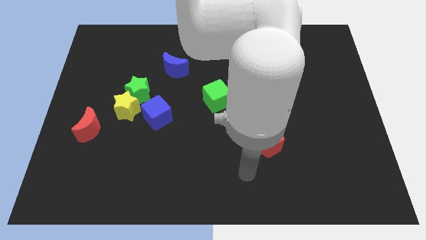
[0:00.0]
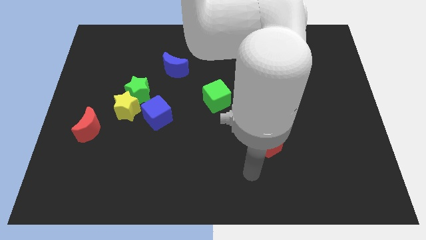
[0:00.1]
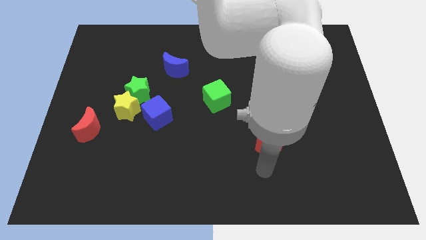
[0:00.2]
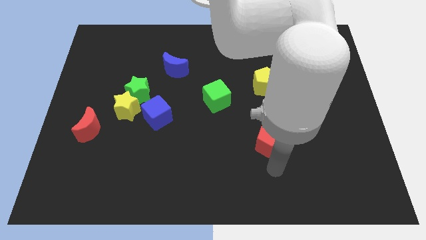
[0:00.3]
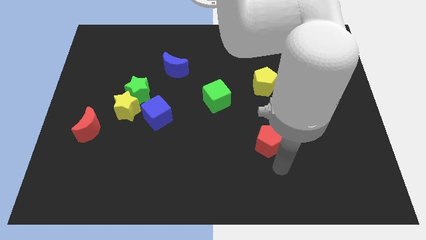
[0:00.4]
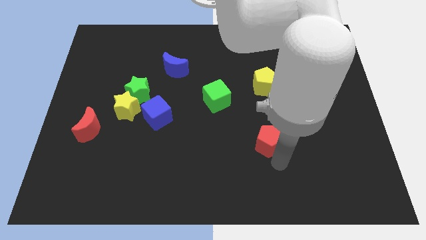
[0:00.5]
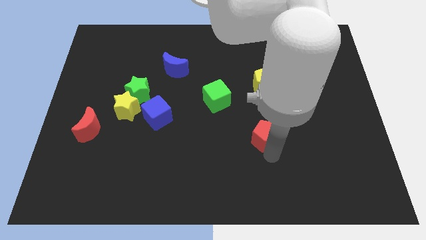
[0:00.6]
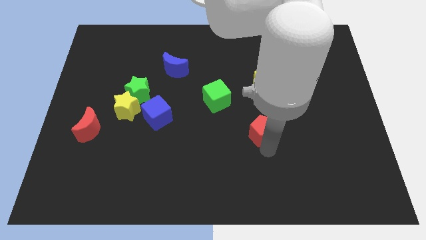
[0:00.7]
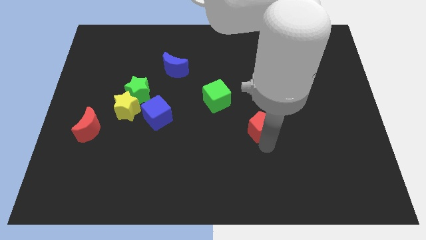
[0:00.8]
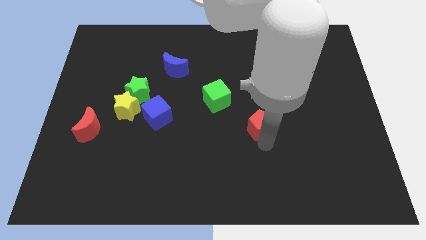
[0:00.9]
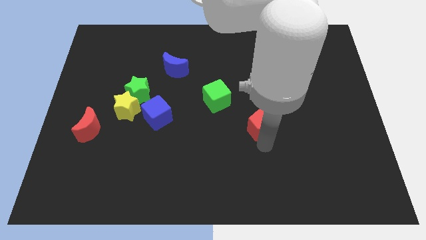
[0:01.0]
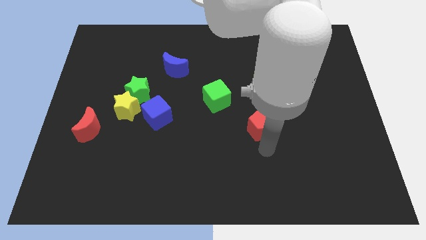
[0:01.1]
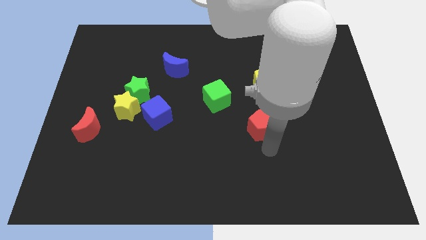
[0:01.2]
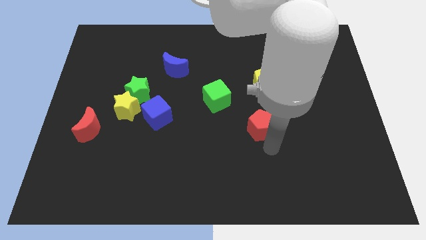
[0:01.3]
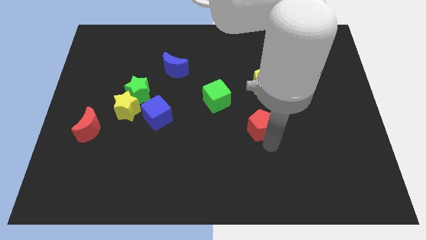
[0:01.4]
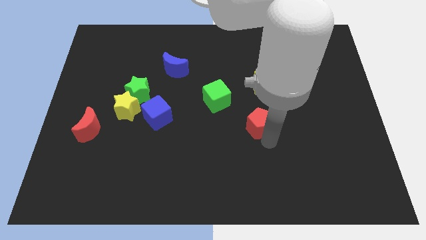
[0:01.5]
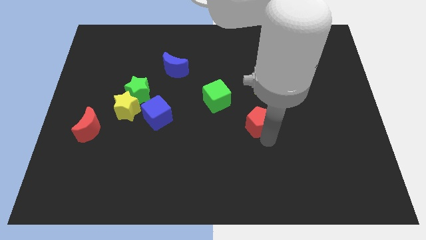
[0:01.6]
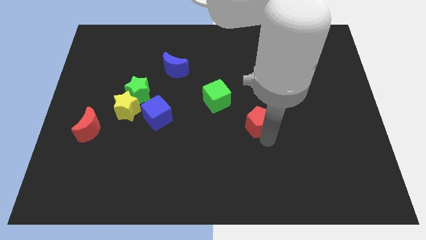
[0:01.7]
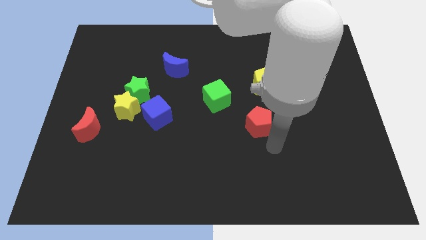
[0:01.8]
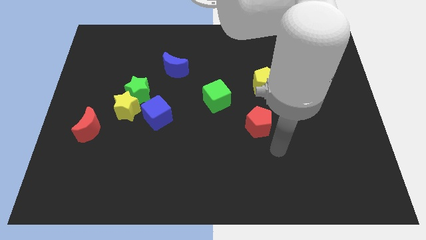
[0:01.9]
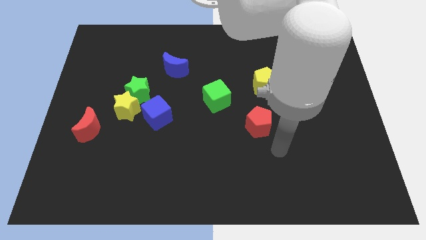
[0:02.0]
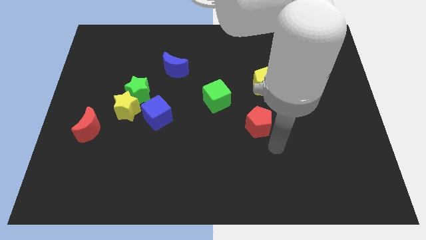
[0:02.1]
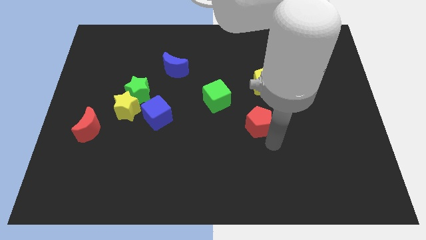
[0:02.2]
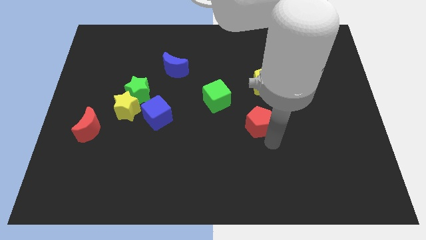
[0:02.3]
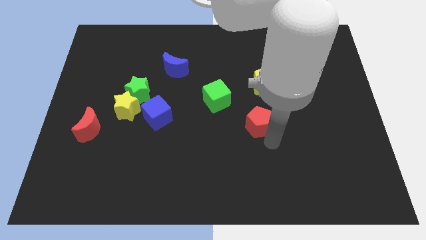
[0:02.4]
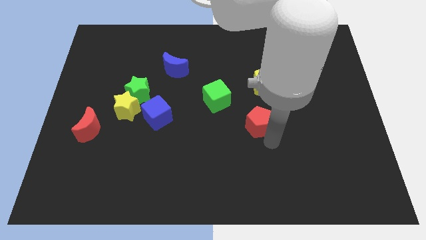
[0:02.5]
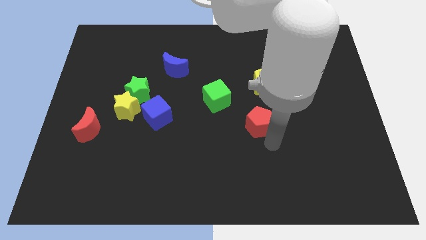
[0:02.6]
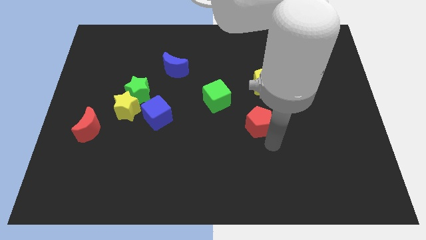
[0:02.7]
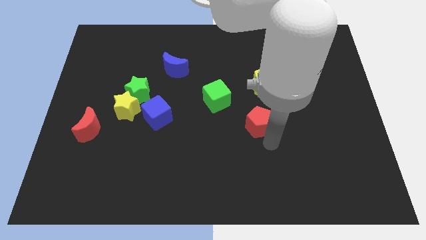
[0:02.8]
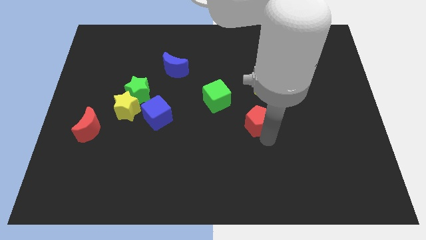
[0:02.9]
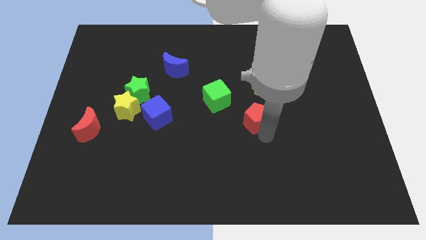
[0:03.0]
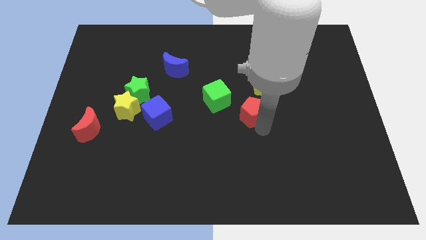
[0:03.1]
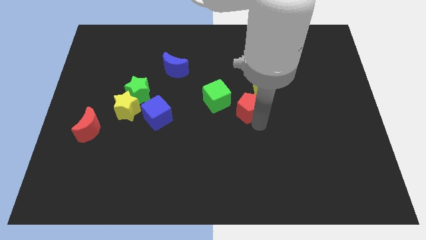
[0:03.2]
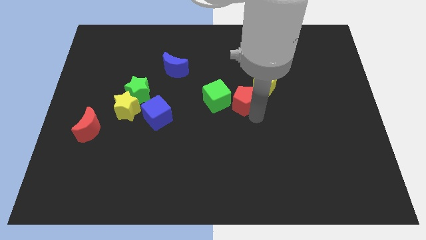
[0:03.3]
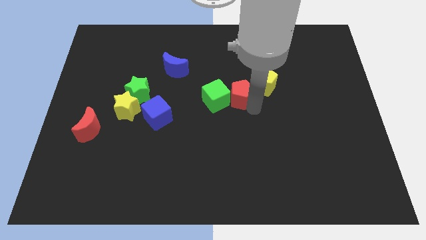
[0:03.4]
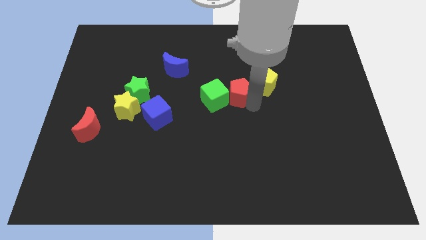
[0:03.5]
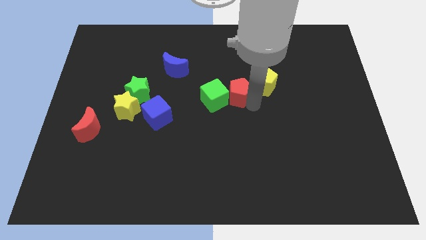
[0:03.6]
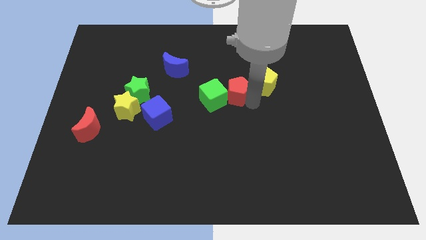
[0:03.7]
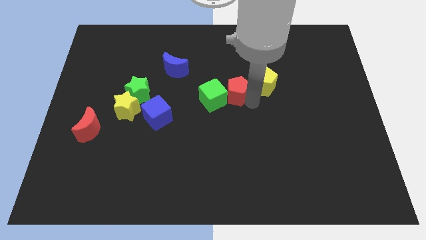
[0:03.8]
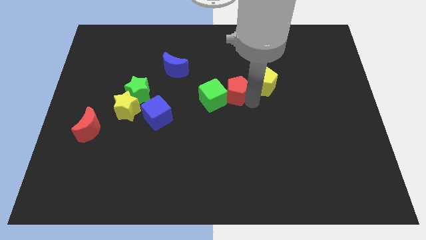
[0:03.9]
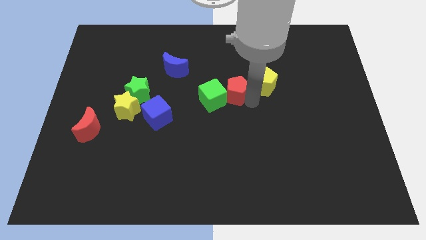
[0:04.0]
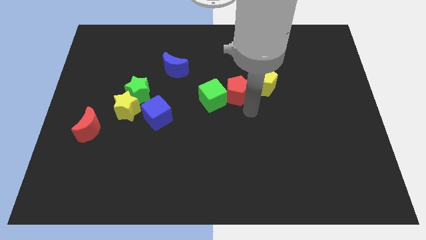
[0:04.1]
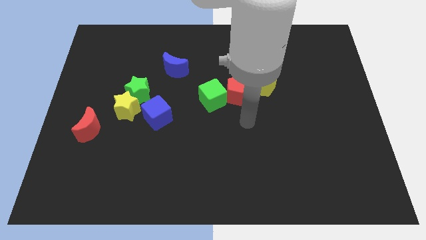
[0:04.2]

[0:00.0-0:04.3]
place the red pentagon in between the green cube and yellow pentagon

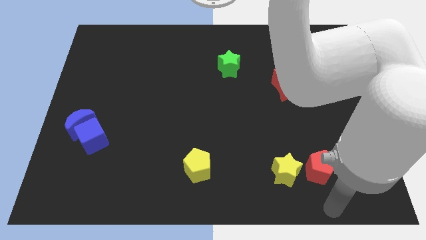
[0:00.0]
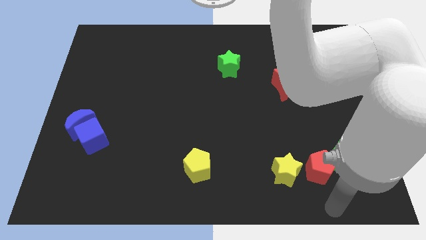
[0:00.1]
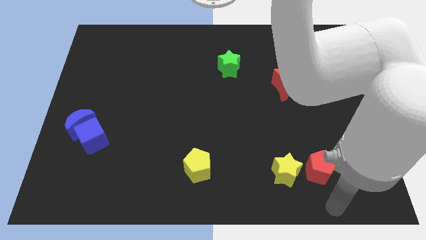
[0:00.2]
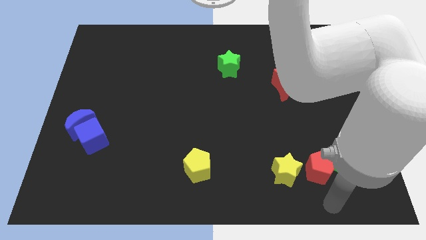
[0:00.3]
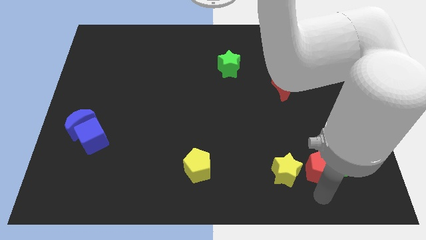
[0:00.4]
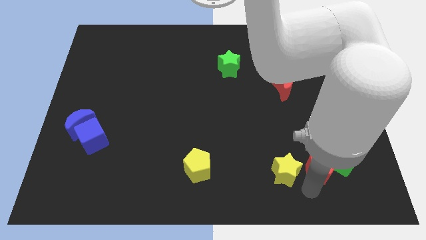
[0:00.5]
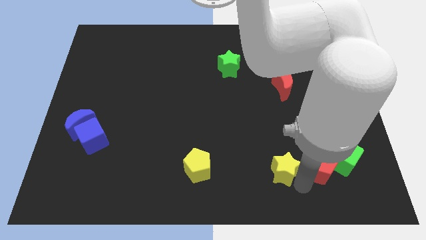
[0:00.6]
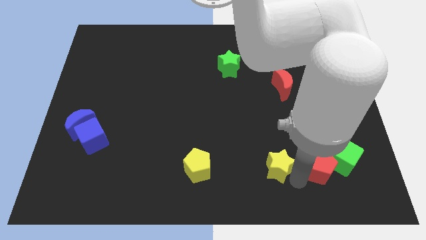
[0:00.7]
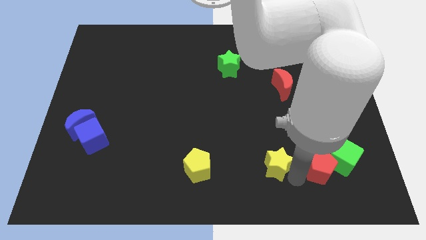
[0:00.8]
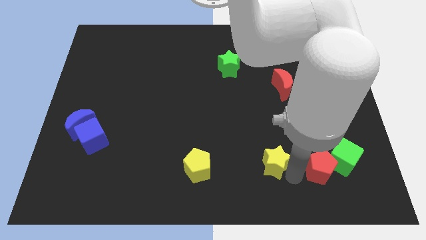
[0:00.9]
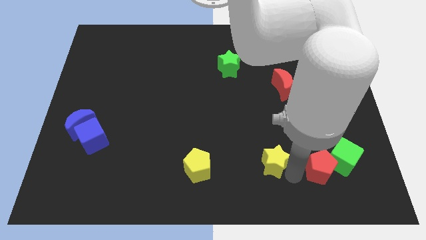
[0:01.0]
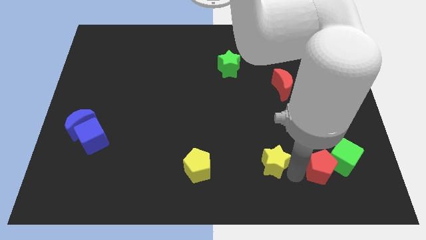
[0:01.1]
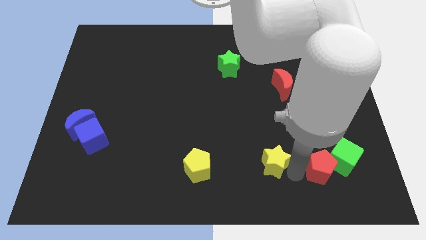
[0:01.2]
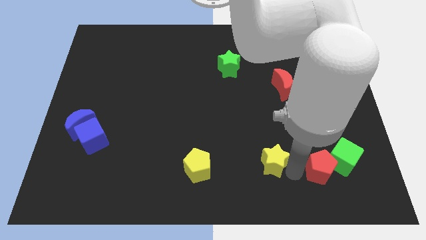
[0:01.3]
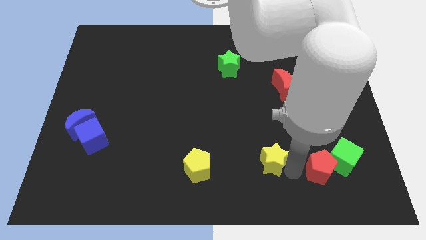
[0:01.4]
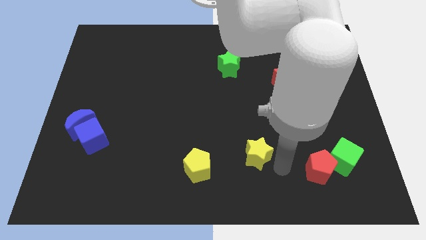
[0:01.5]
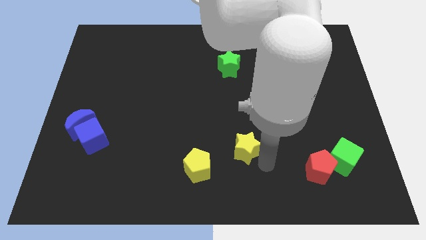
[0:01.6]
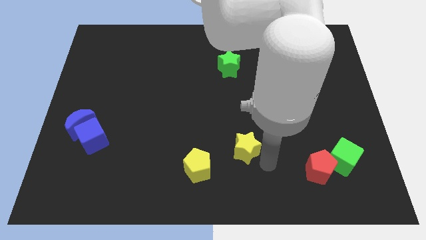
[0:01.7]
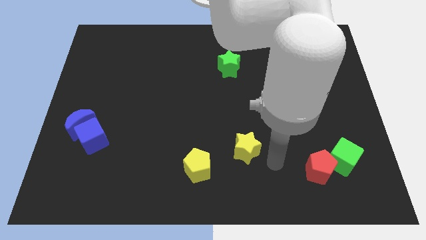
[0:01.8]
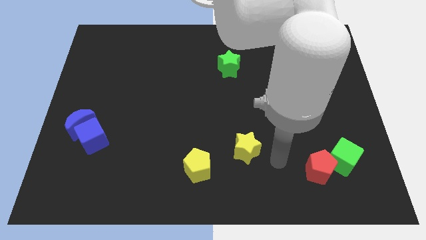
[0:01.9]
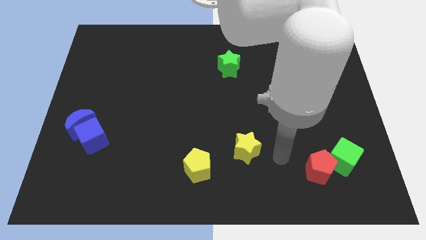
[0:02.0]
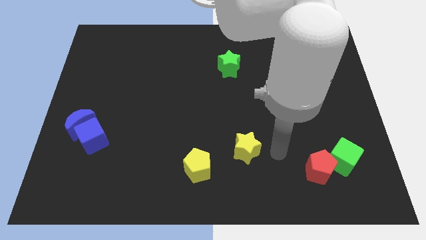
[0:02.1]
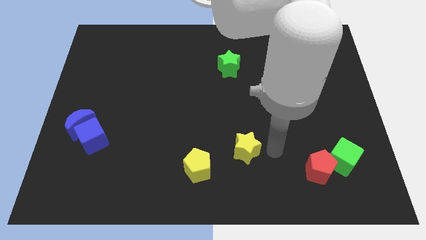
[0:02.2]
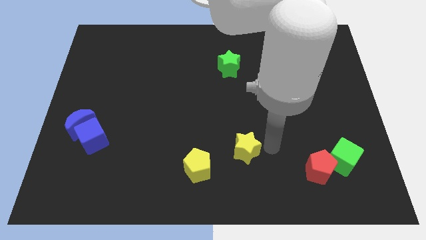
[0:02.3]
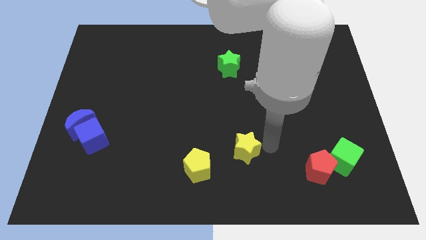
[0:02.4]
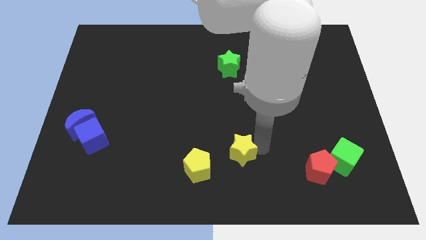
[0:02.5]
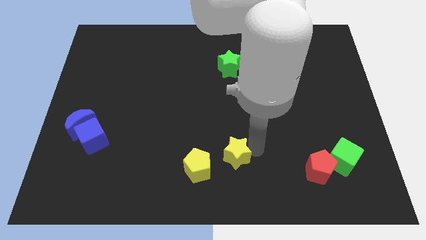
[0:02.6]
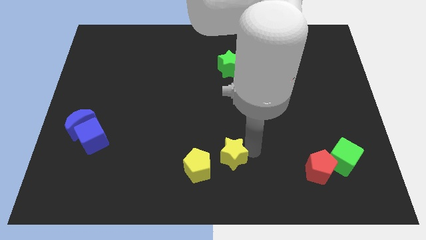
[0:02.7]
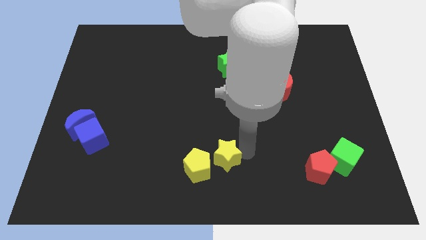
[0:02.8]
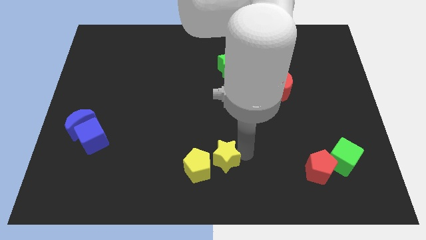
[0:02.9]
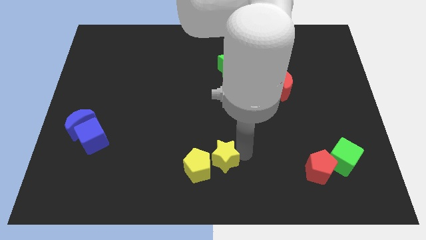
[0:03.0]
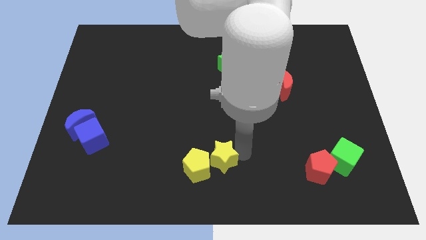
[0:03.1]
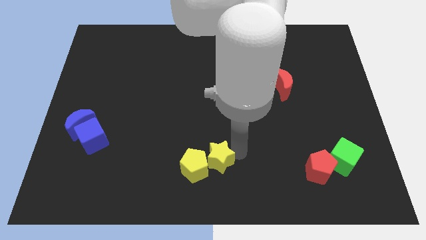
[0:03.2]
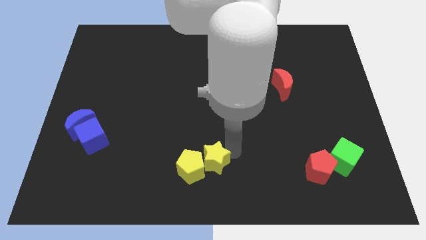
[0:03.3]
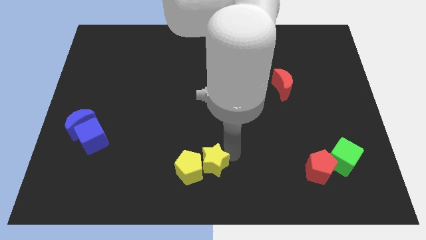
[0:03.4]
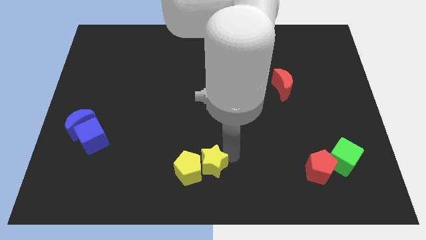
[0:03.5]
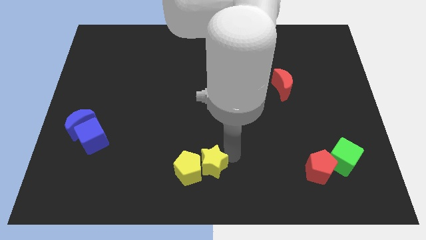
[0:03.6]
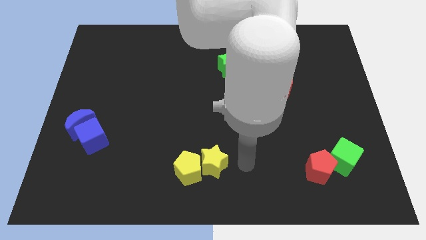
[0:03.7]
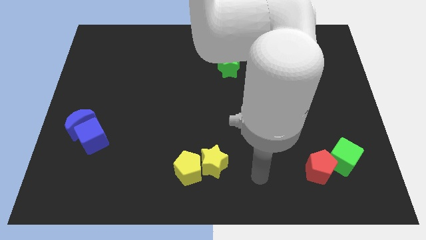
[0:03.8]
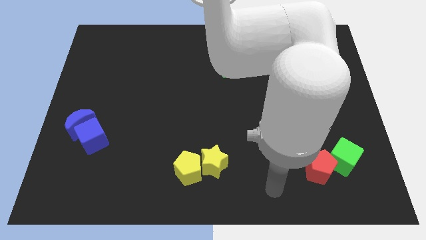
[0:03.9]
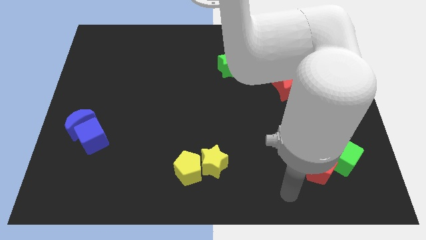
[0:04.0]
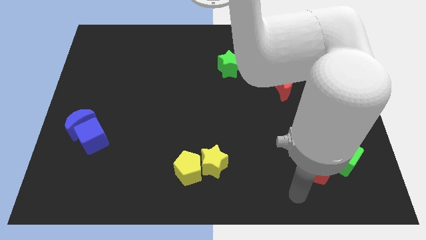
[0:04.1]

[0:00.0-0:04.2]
push the yellow star into the yellow pentagon

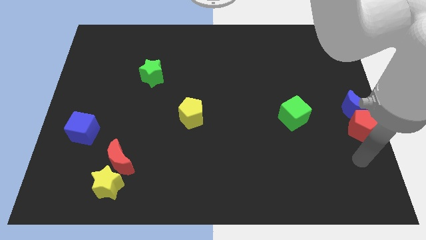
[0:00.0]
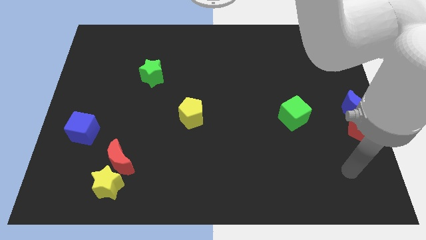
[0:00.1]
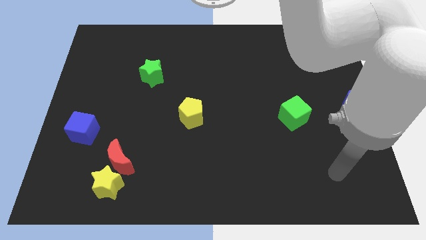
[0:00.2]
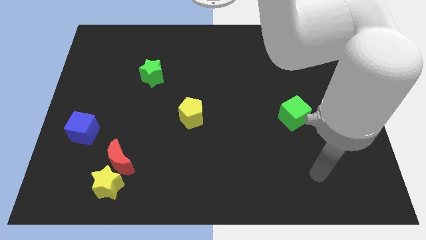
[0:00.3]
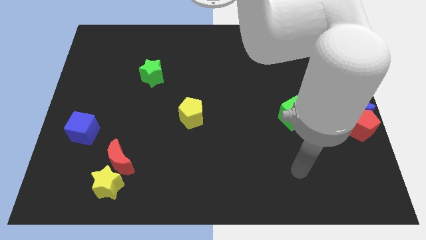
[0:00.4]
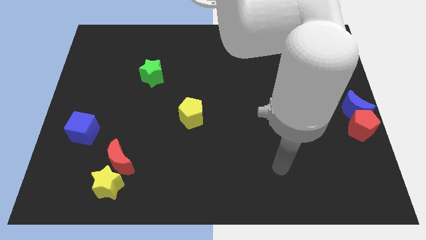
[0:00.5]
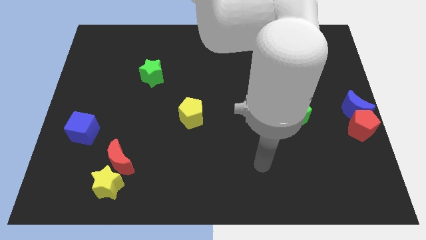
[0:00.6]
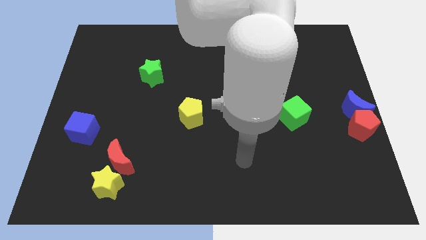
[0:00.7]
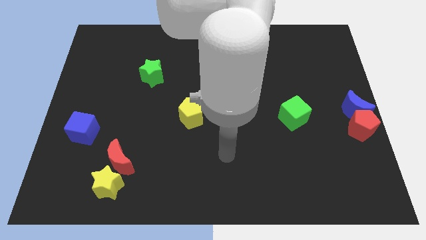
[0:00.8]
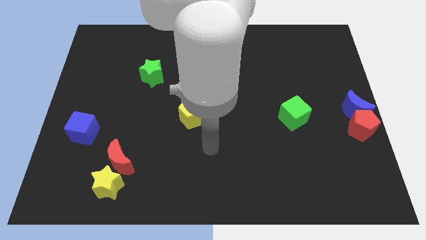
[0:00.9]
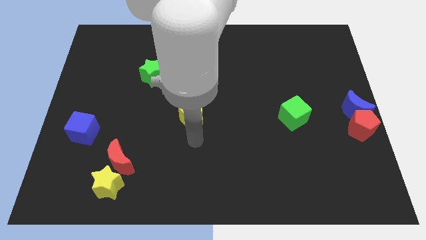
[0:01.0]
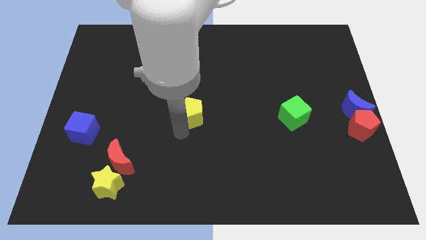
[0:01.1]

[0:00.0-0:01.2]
place your hand close to yellow pentagon
